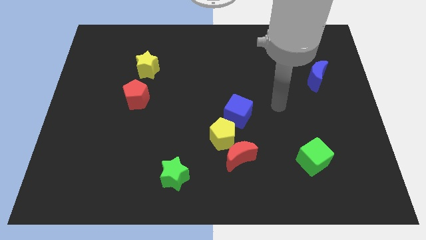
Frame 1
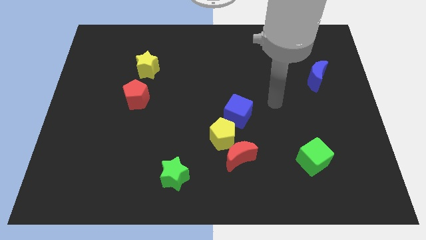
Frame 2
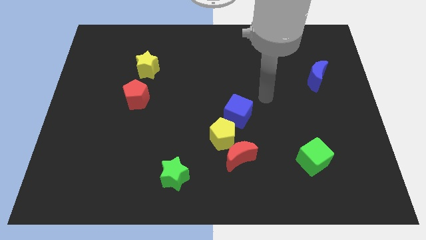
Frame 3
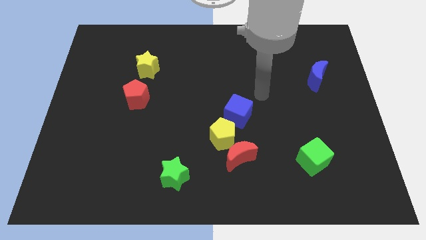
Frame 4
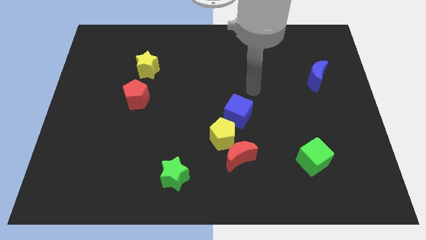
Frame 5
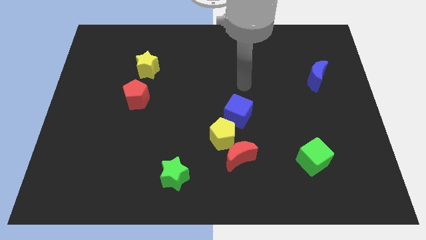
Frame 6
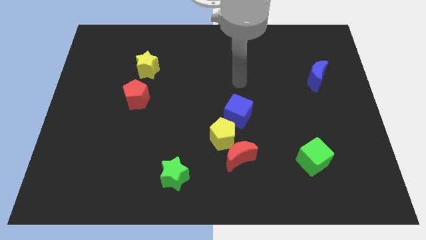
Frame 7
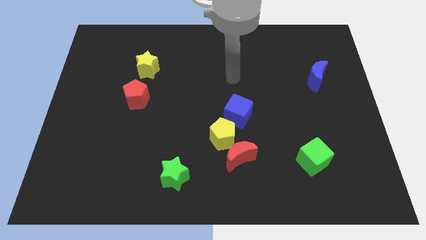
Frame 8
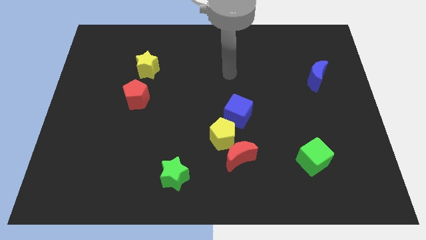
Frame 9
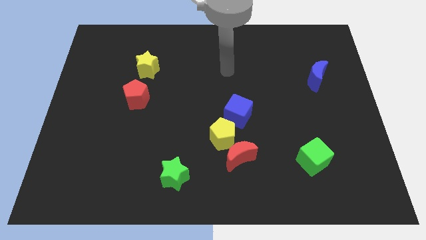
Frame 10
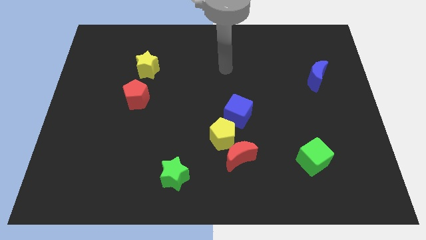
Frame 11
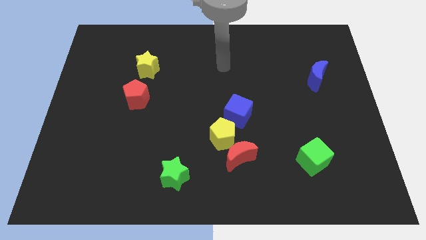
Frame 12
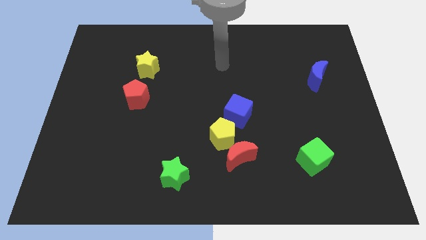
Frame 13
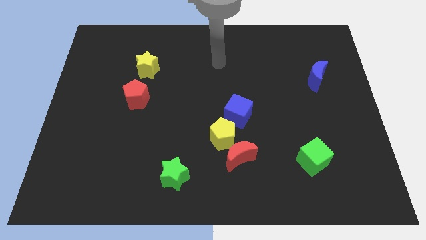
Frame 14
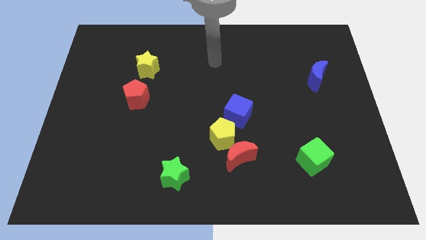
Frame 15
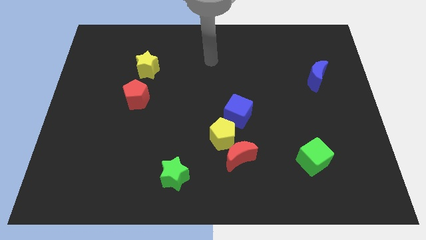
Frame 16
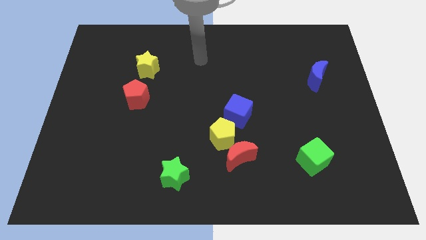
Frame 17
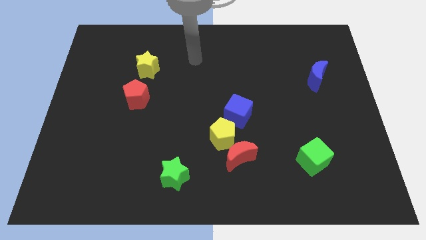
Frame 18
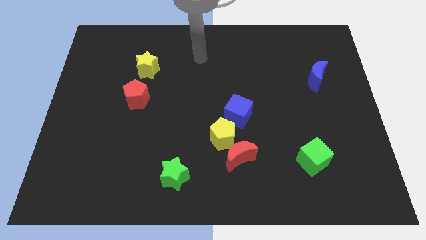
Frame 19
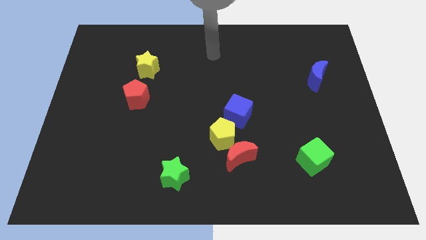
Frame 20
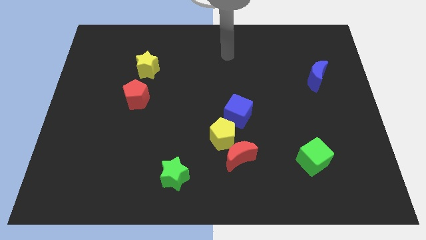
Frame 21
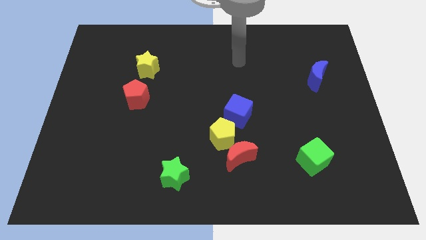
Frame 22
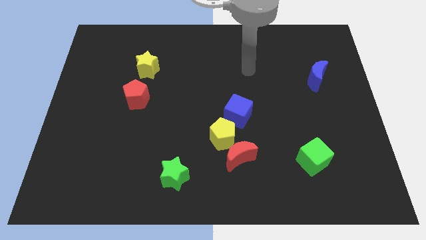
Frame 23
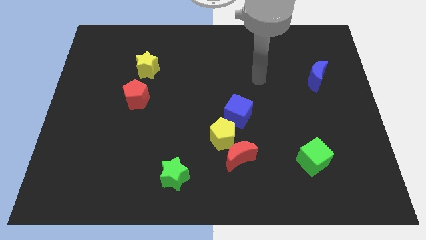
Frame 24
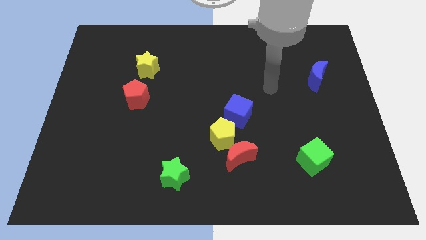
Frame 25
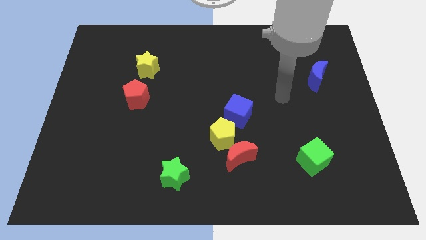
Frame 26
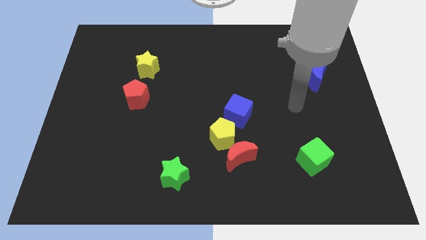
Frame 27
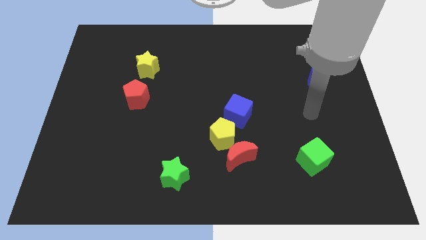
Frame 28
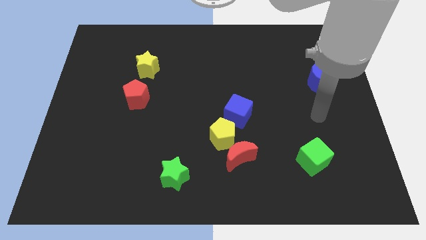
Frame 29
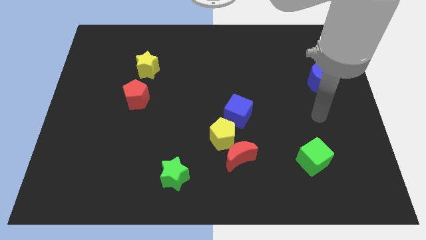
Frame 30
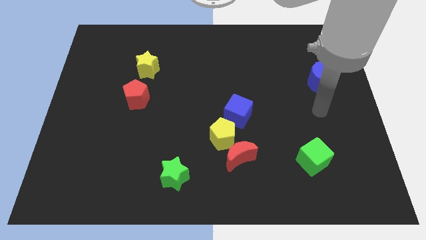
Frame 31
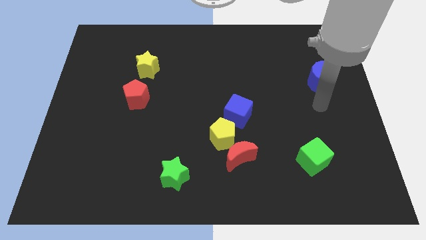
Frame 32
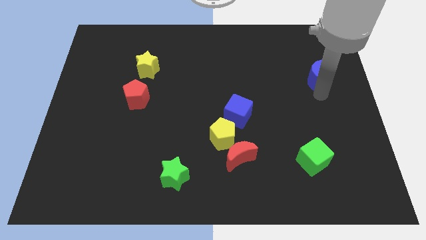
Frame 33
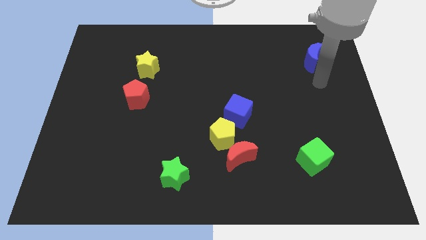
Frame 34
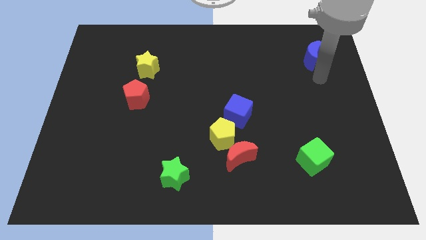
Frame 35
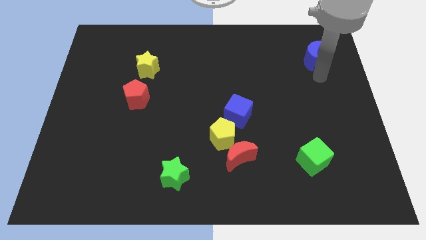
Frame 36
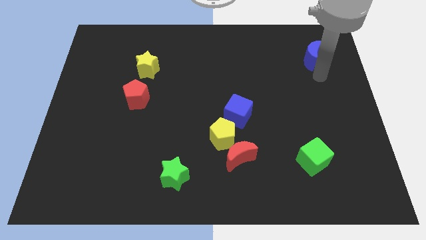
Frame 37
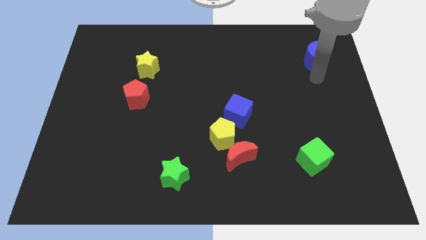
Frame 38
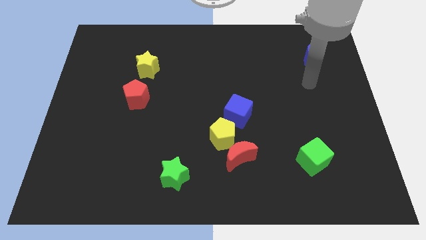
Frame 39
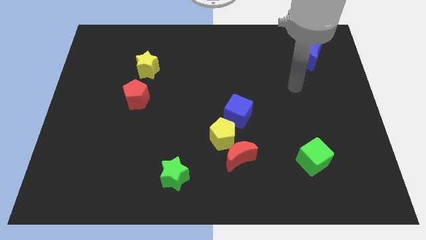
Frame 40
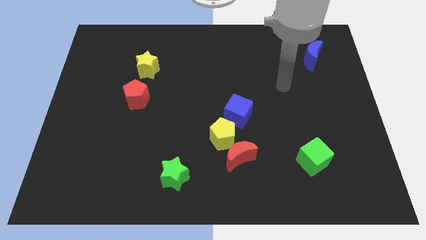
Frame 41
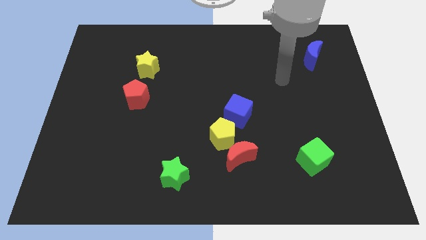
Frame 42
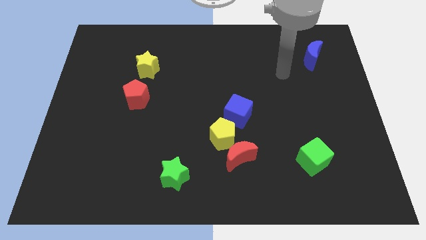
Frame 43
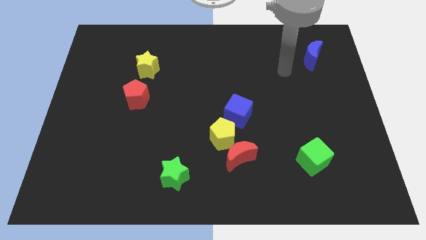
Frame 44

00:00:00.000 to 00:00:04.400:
push the blue moon slightly to the top side of the board

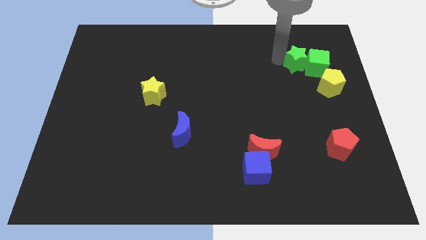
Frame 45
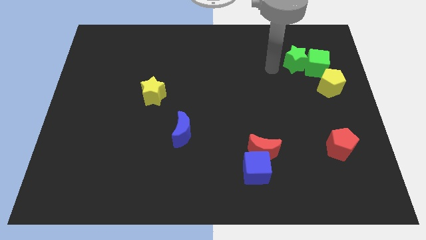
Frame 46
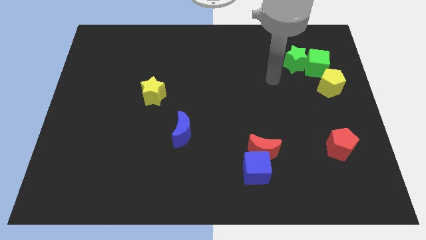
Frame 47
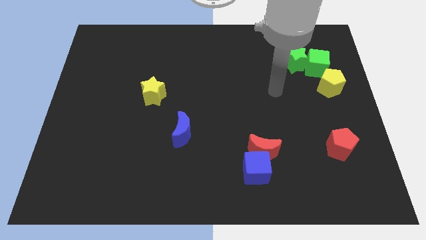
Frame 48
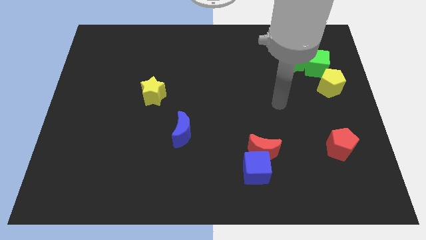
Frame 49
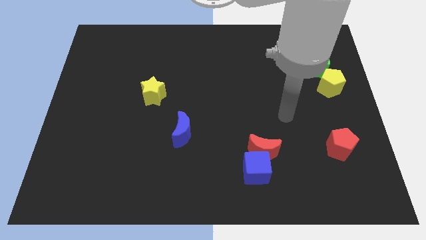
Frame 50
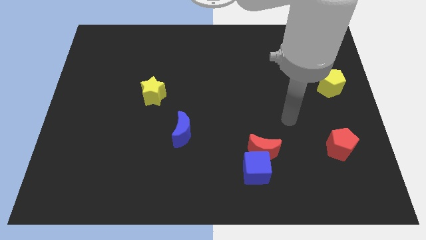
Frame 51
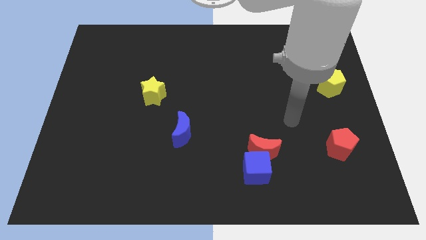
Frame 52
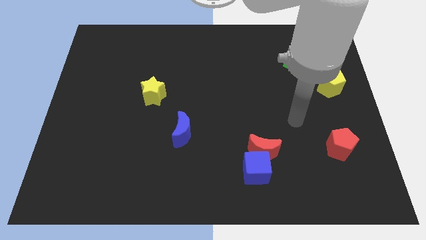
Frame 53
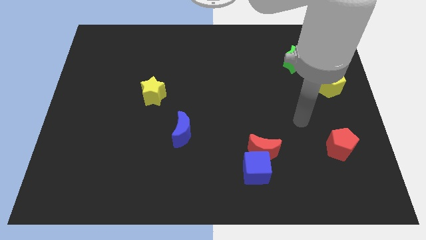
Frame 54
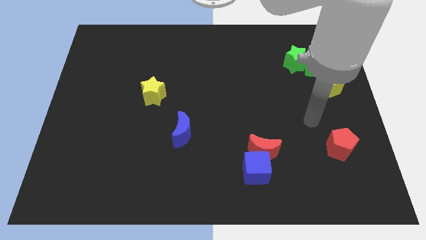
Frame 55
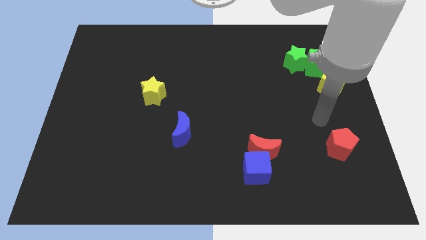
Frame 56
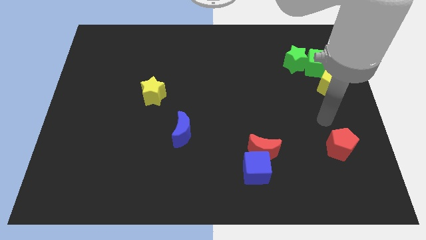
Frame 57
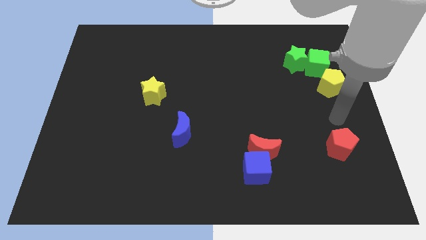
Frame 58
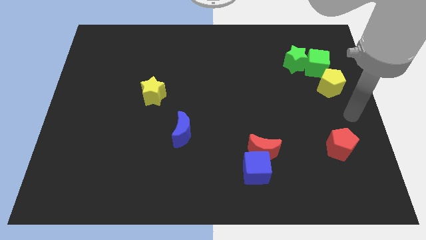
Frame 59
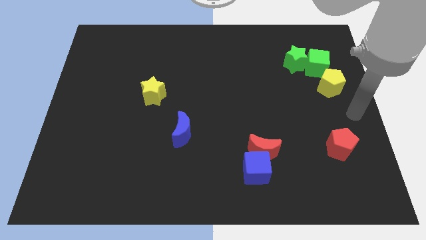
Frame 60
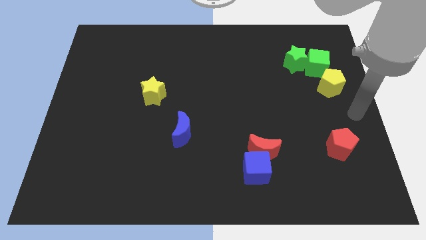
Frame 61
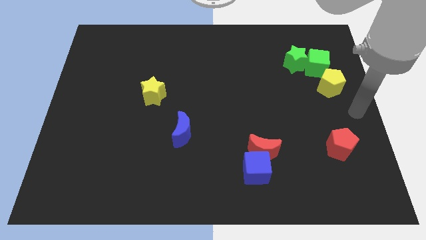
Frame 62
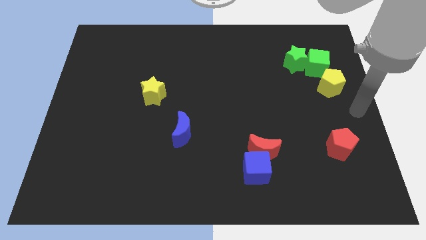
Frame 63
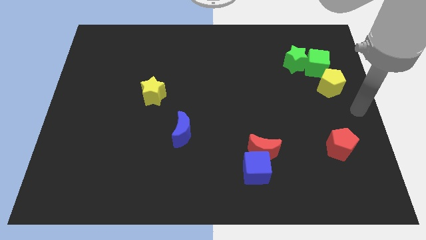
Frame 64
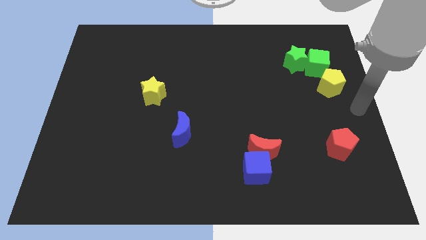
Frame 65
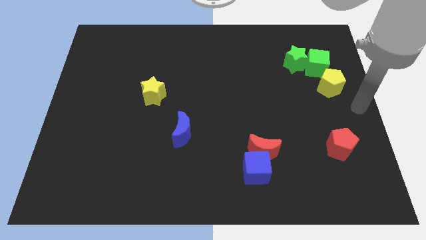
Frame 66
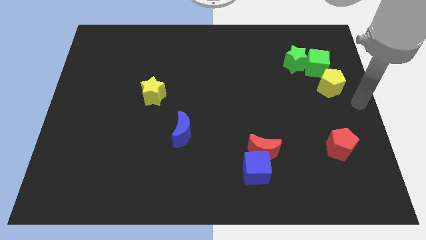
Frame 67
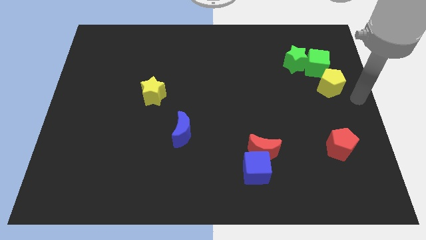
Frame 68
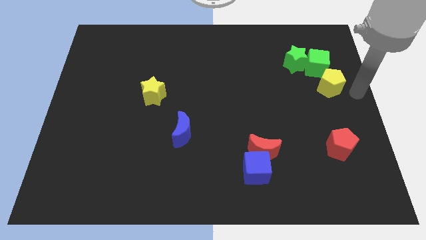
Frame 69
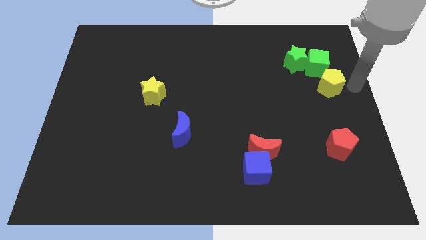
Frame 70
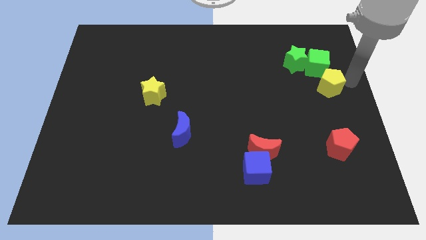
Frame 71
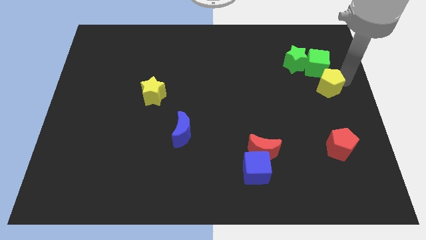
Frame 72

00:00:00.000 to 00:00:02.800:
move the arm to the center right

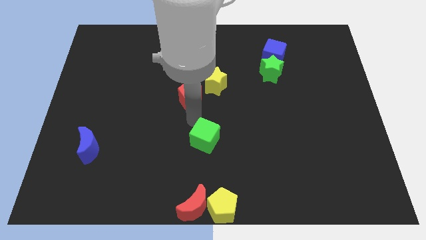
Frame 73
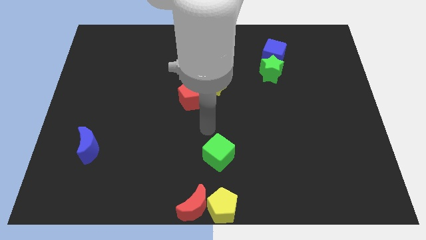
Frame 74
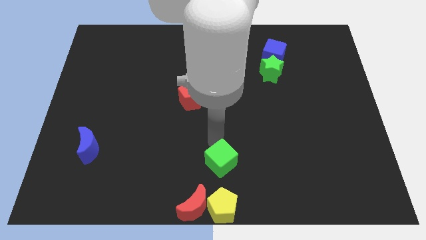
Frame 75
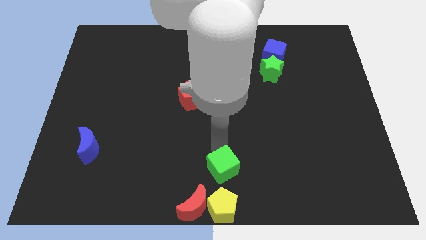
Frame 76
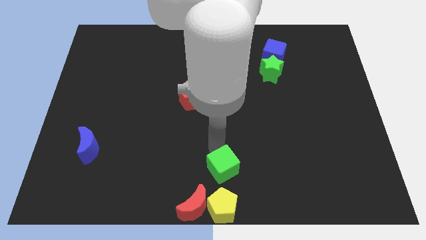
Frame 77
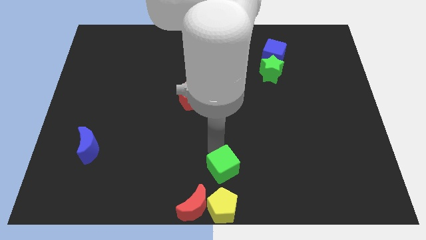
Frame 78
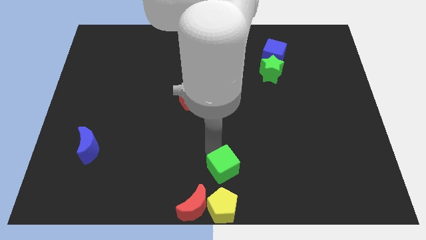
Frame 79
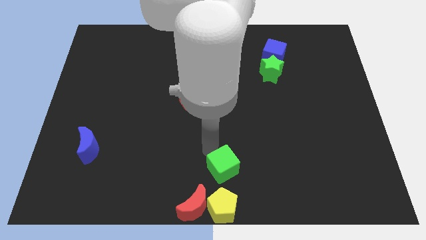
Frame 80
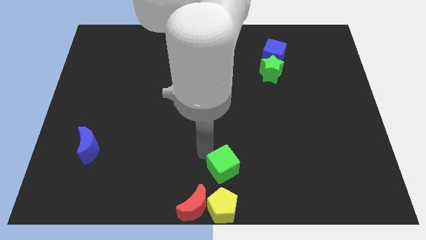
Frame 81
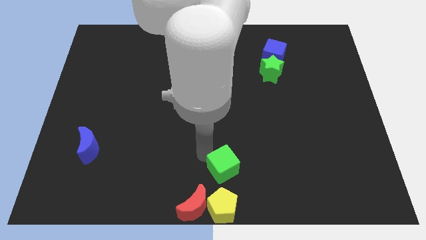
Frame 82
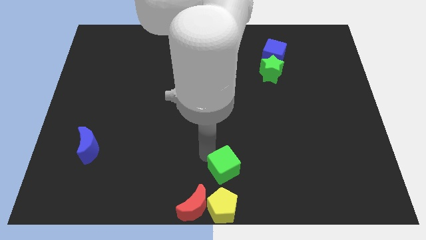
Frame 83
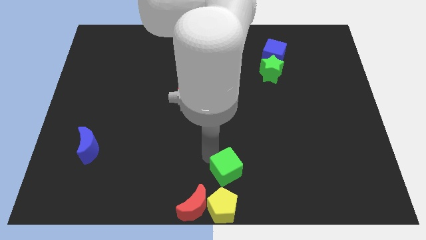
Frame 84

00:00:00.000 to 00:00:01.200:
put the green cube at the bottom center

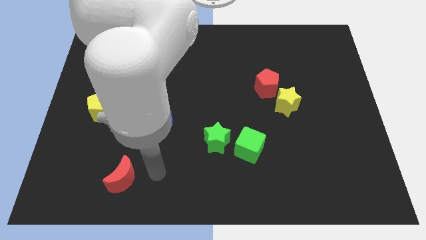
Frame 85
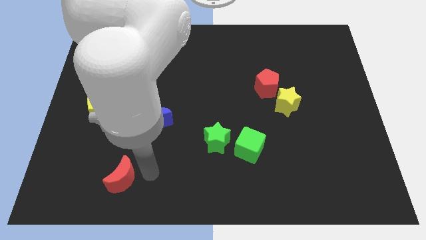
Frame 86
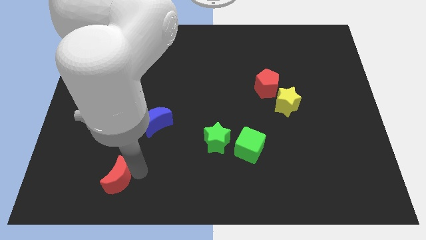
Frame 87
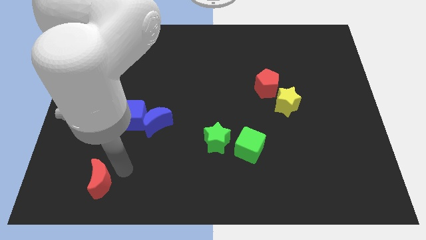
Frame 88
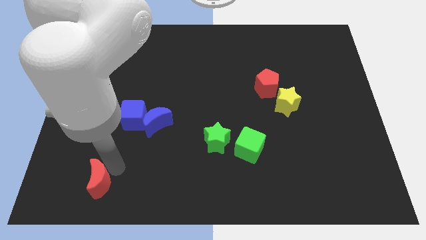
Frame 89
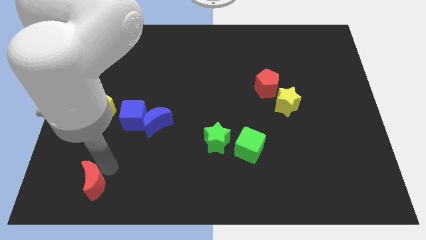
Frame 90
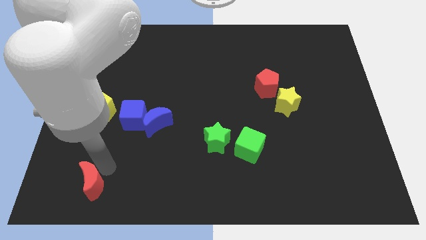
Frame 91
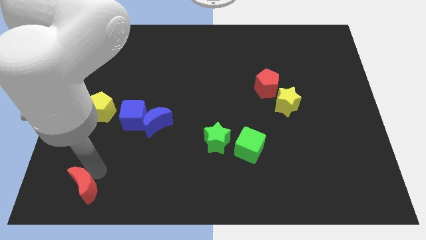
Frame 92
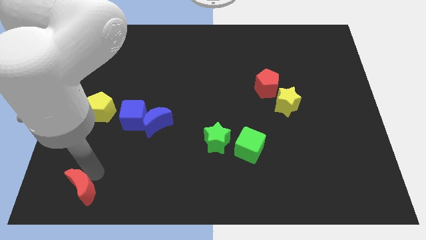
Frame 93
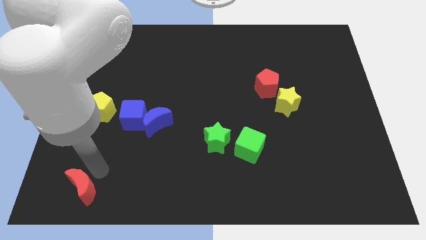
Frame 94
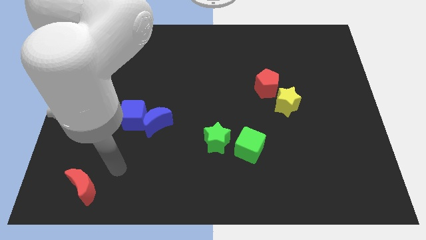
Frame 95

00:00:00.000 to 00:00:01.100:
put the red crescent below the yellow pentagon
